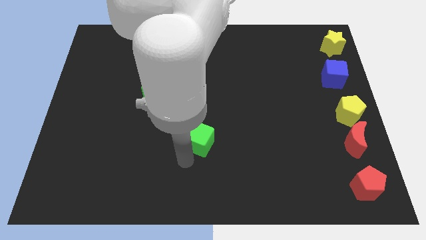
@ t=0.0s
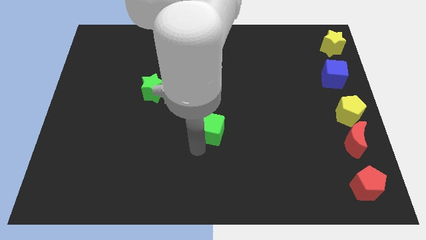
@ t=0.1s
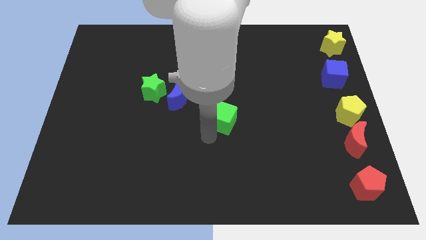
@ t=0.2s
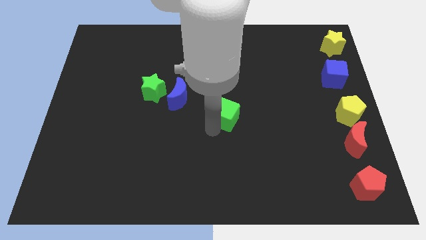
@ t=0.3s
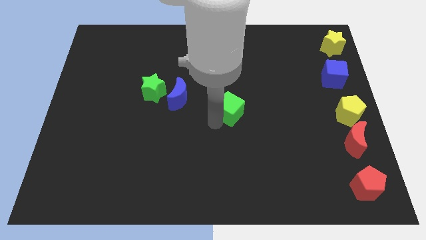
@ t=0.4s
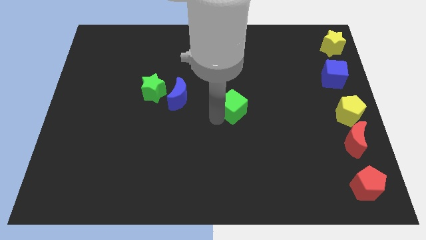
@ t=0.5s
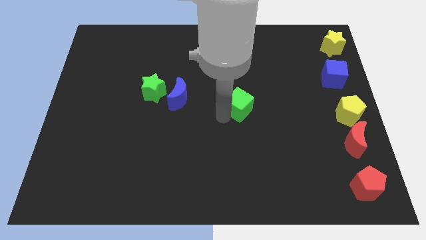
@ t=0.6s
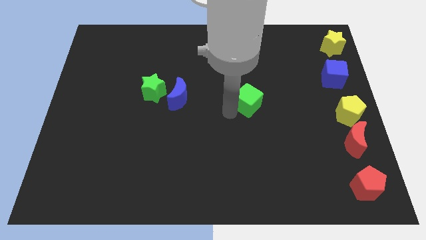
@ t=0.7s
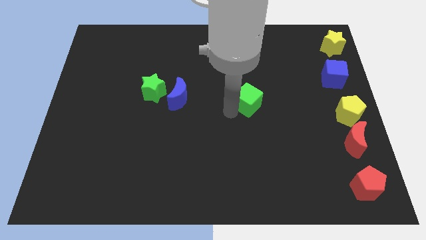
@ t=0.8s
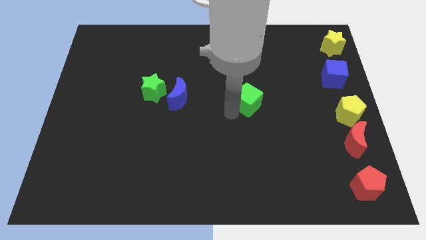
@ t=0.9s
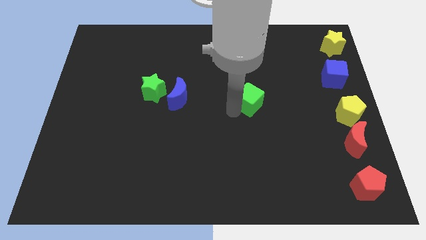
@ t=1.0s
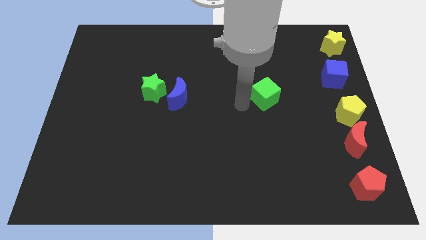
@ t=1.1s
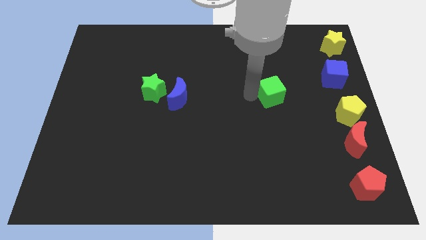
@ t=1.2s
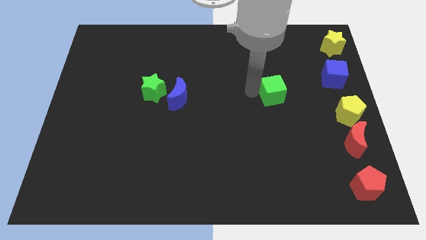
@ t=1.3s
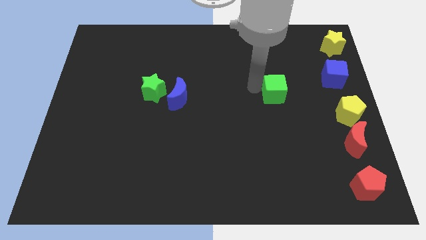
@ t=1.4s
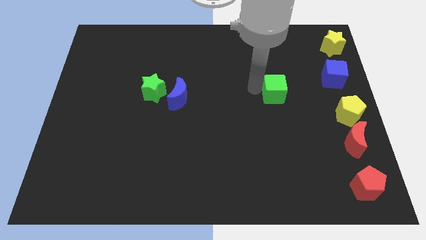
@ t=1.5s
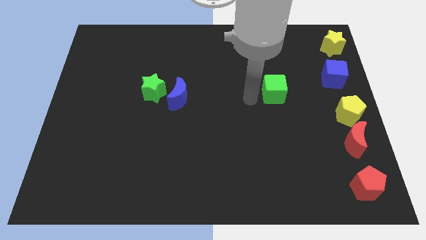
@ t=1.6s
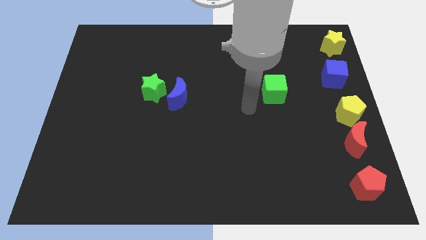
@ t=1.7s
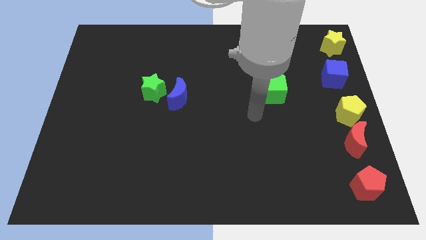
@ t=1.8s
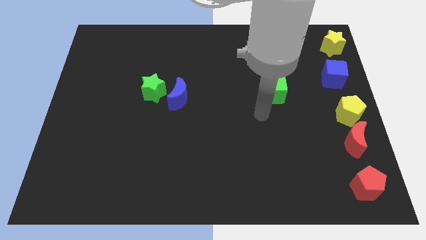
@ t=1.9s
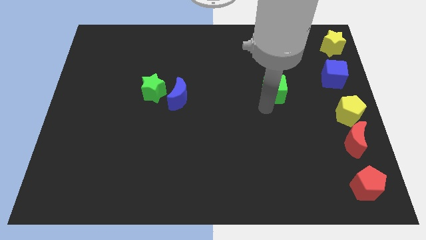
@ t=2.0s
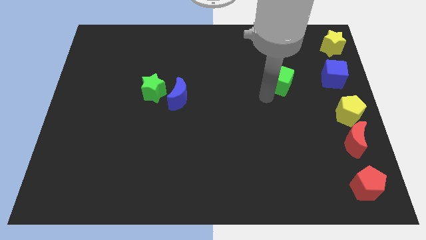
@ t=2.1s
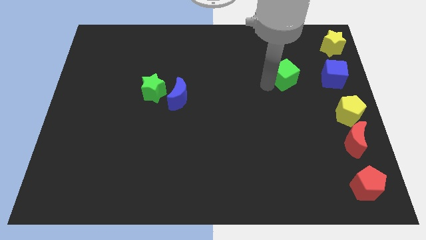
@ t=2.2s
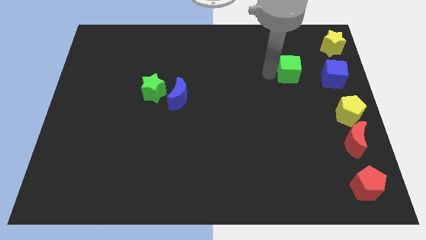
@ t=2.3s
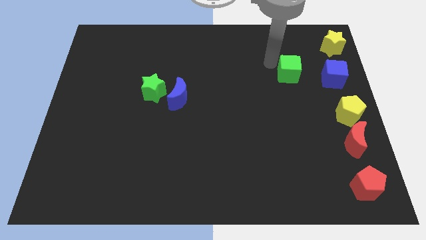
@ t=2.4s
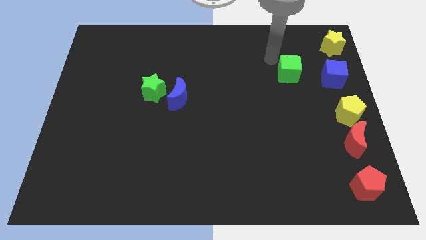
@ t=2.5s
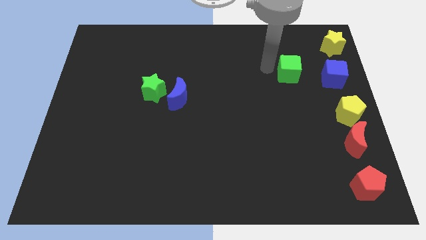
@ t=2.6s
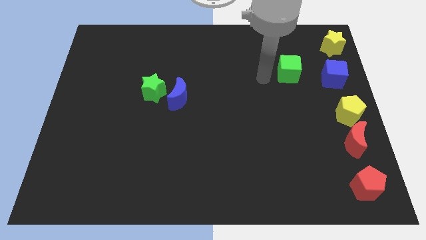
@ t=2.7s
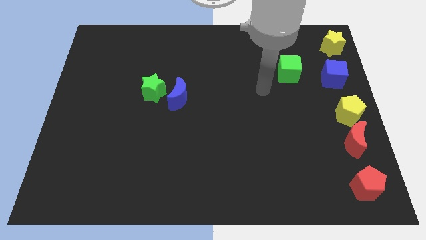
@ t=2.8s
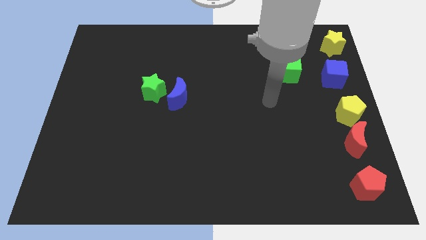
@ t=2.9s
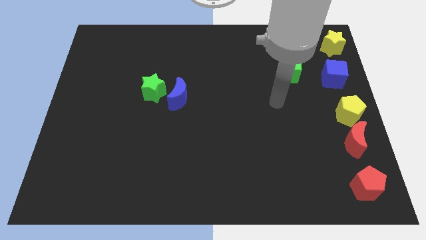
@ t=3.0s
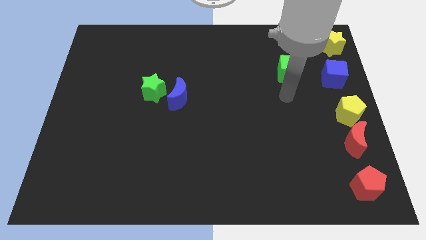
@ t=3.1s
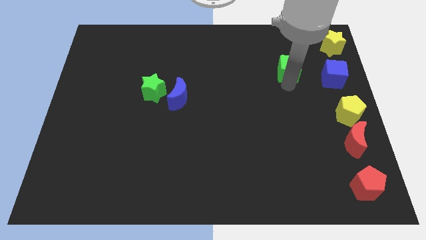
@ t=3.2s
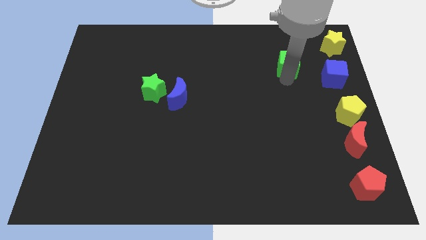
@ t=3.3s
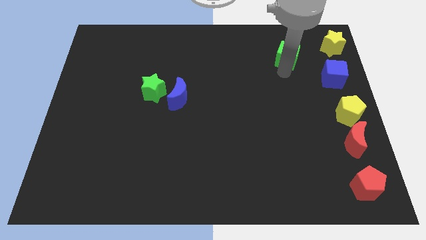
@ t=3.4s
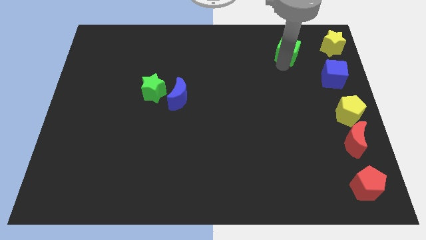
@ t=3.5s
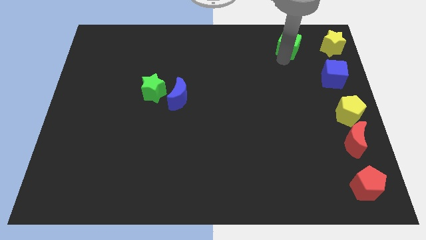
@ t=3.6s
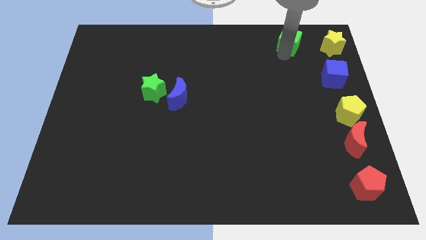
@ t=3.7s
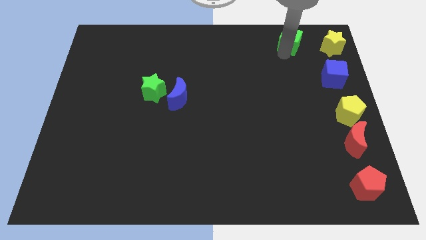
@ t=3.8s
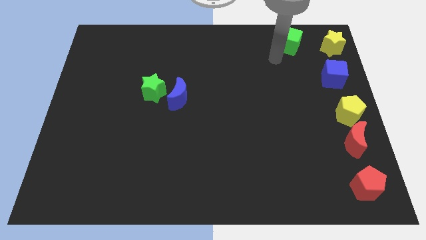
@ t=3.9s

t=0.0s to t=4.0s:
place green cube to the left of yellow star

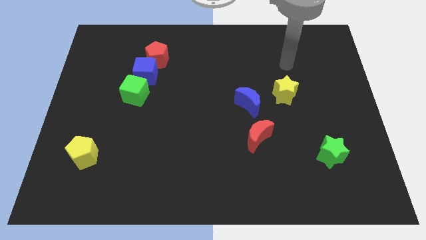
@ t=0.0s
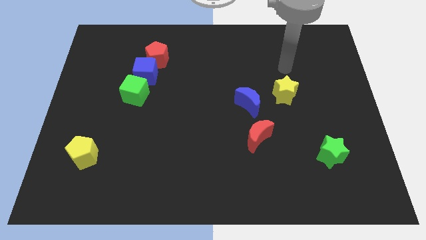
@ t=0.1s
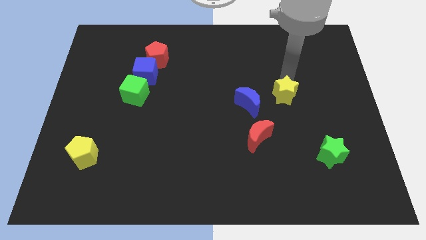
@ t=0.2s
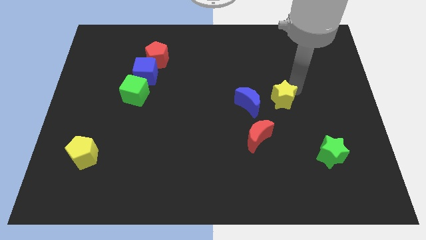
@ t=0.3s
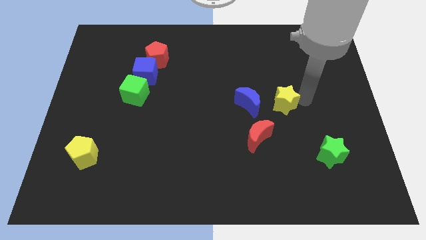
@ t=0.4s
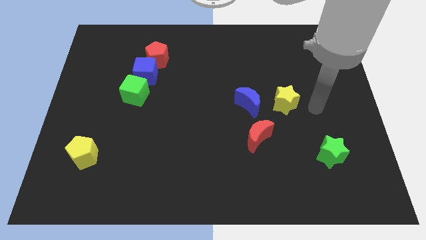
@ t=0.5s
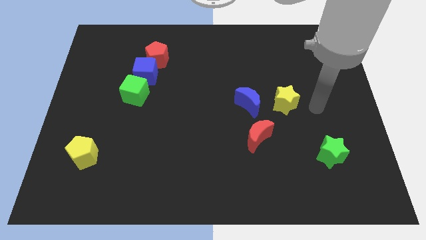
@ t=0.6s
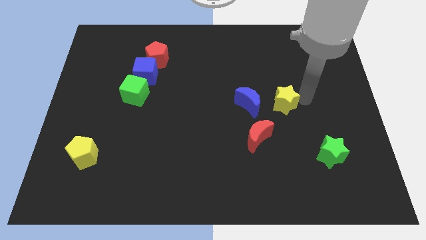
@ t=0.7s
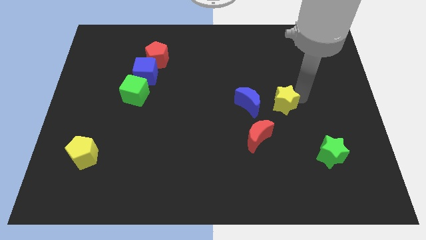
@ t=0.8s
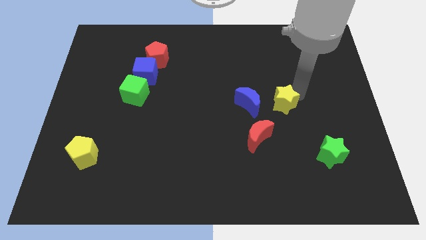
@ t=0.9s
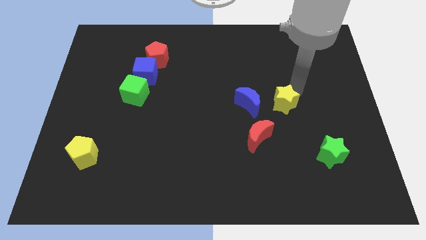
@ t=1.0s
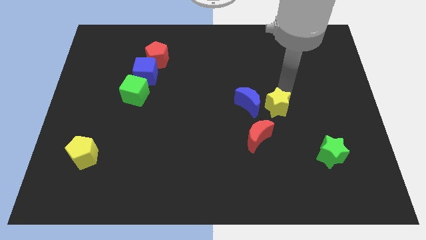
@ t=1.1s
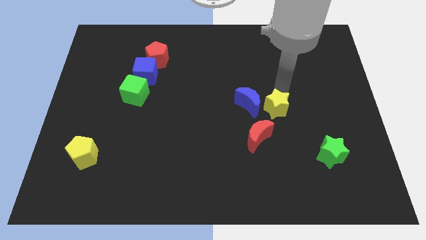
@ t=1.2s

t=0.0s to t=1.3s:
slide the yellow star down slightly

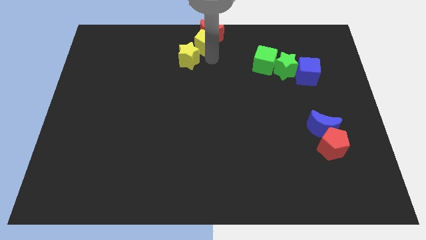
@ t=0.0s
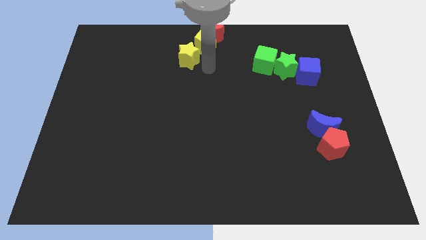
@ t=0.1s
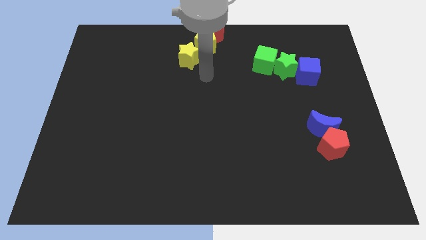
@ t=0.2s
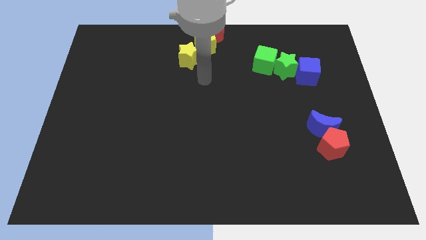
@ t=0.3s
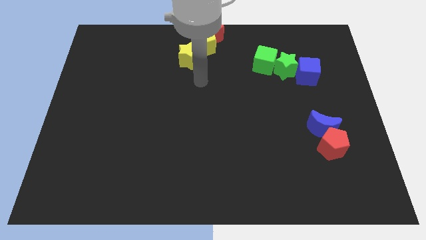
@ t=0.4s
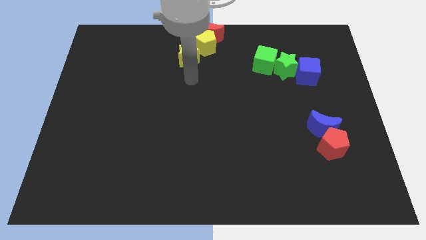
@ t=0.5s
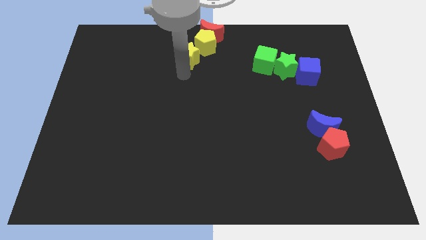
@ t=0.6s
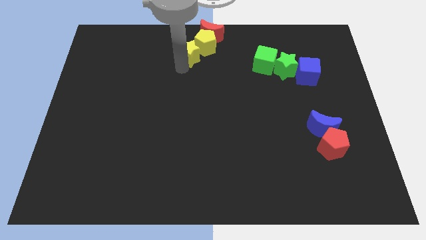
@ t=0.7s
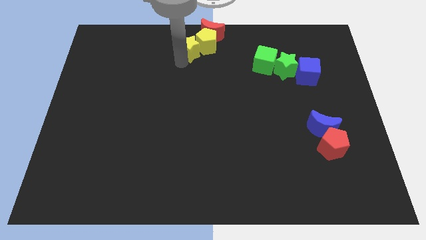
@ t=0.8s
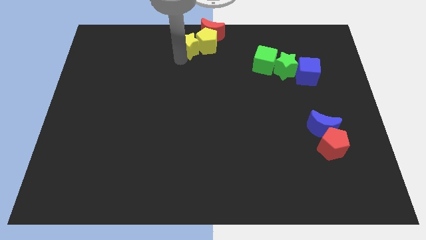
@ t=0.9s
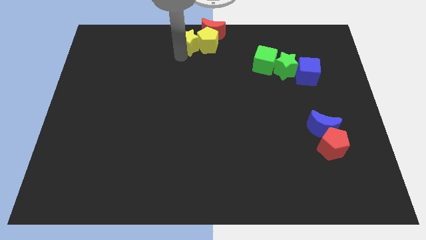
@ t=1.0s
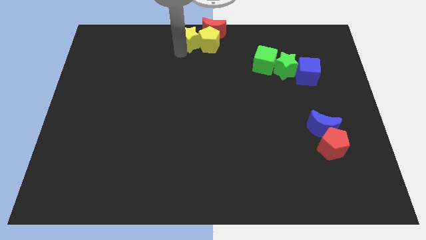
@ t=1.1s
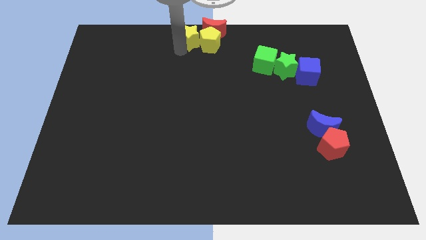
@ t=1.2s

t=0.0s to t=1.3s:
put the yellow star left to the yellow pentagon

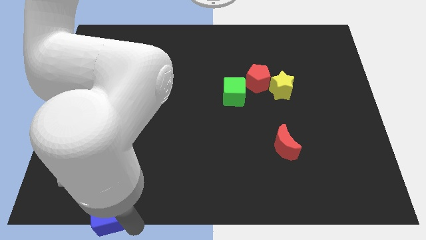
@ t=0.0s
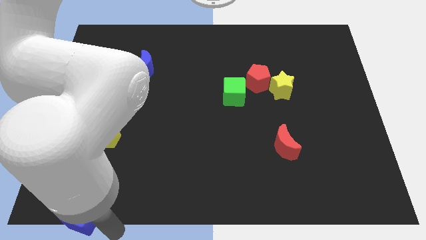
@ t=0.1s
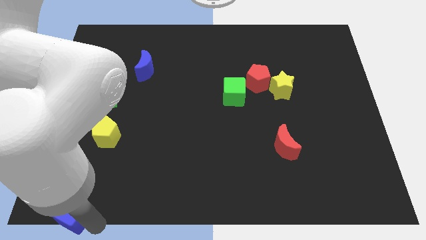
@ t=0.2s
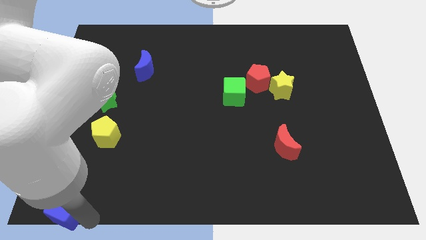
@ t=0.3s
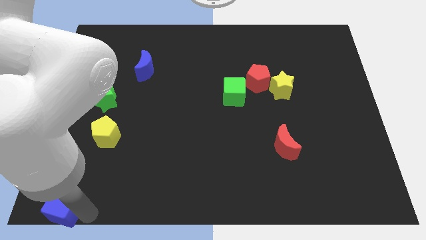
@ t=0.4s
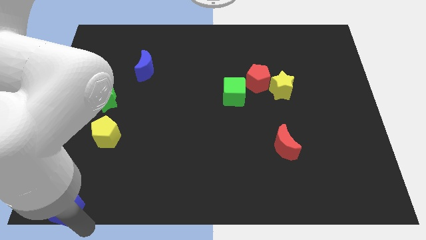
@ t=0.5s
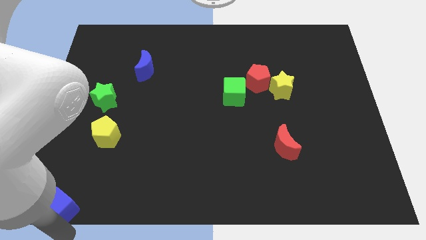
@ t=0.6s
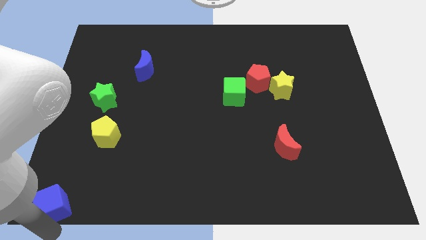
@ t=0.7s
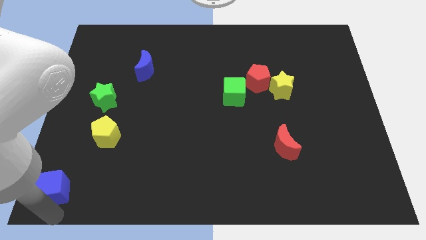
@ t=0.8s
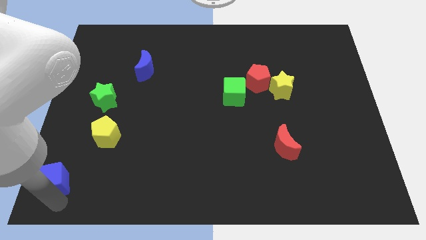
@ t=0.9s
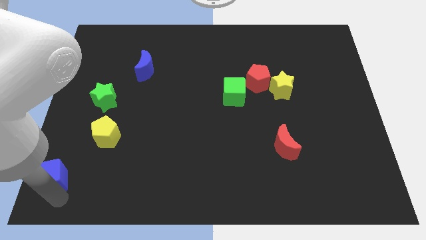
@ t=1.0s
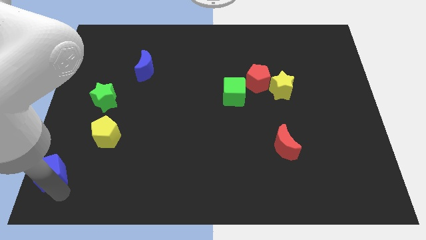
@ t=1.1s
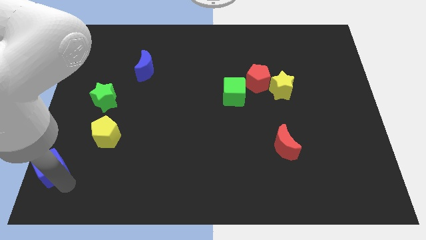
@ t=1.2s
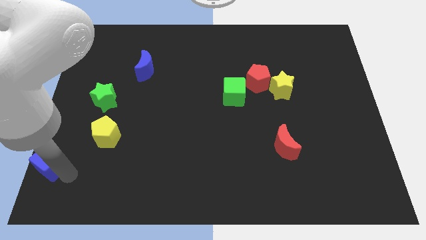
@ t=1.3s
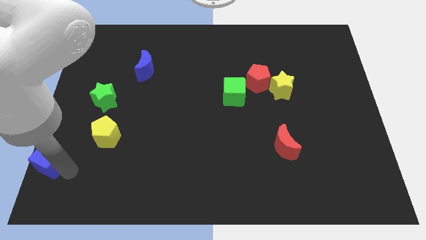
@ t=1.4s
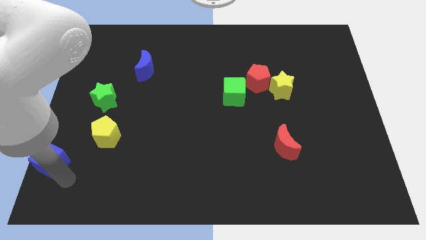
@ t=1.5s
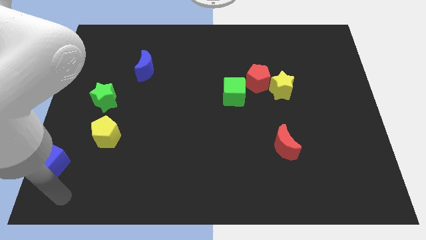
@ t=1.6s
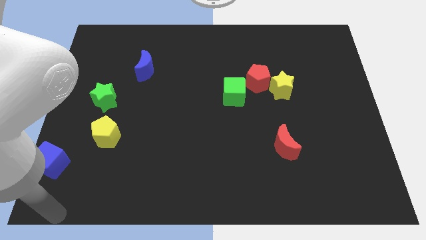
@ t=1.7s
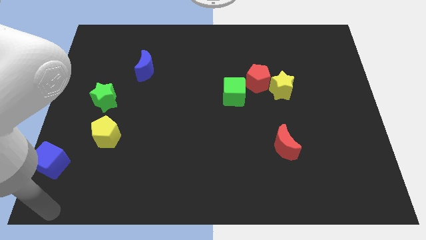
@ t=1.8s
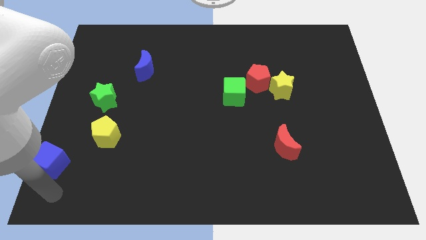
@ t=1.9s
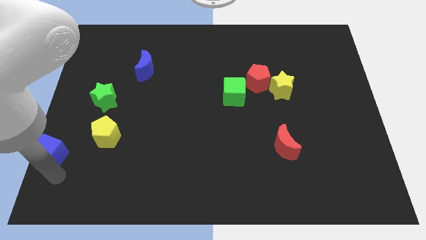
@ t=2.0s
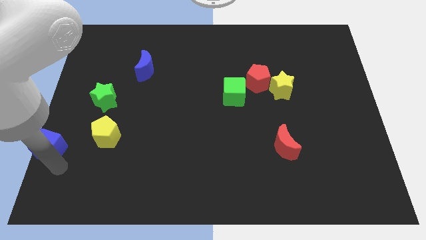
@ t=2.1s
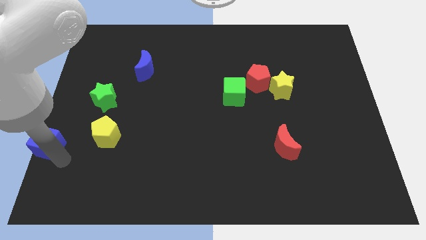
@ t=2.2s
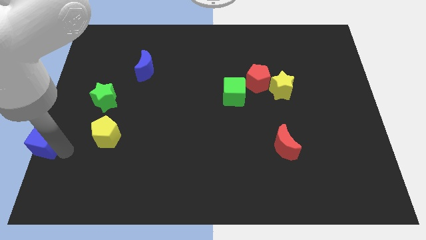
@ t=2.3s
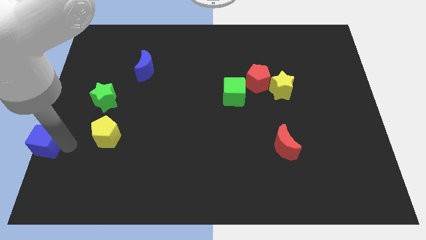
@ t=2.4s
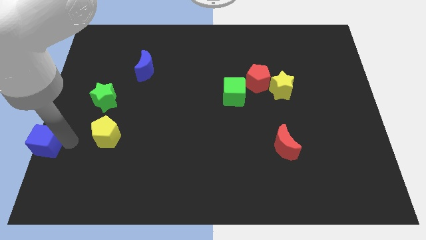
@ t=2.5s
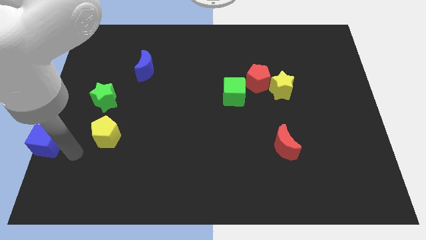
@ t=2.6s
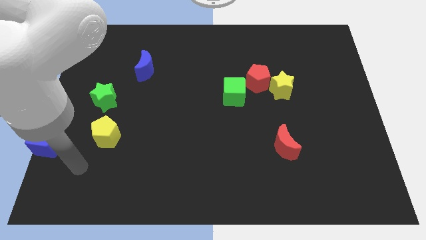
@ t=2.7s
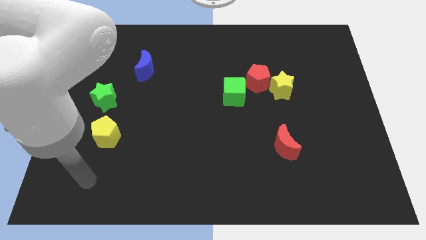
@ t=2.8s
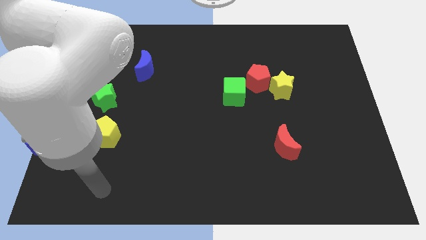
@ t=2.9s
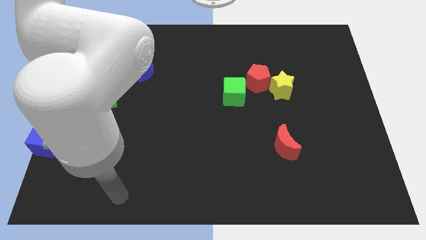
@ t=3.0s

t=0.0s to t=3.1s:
place blue cube to left of yellow pentagon
